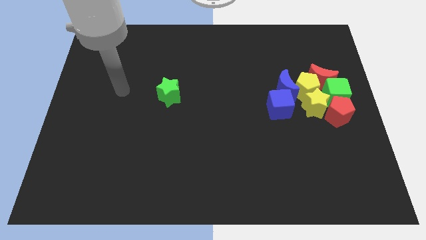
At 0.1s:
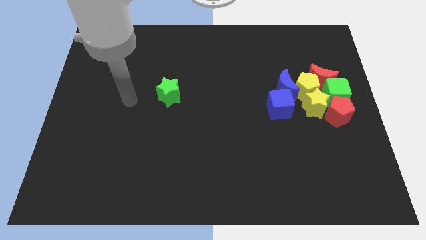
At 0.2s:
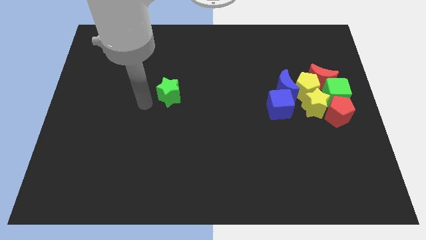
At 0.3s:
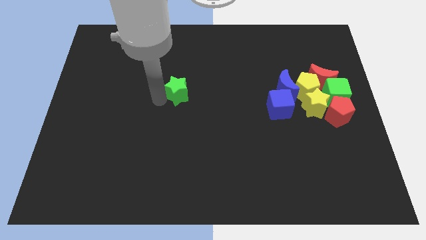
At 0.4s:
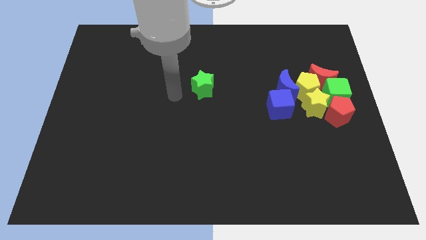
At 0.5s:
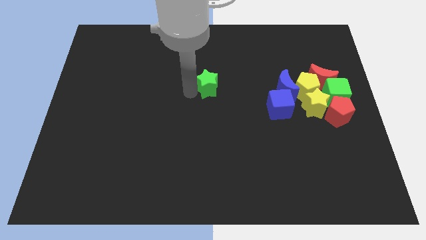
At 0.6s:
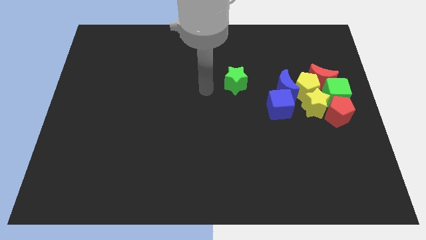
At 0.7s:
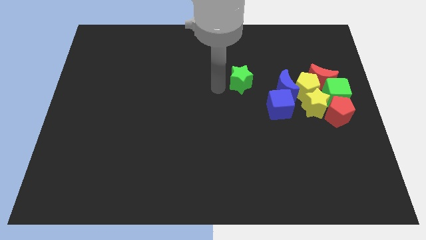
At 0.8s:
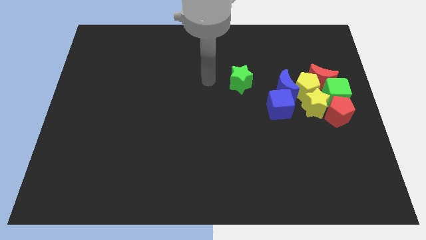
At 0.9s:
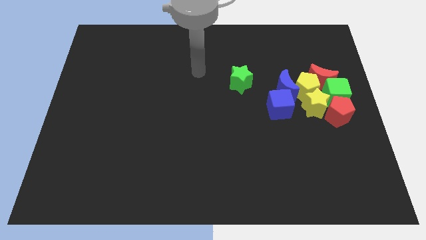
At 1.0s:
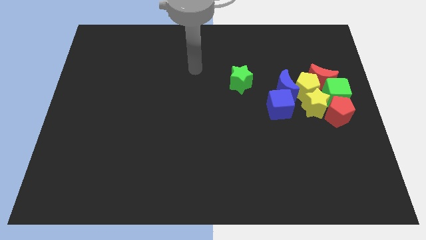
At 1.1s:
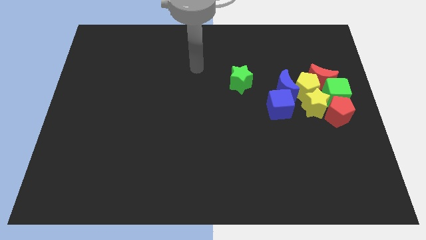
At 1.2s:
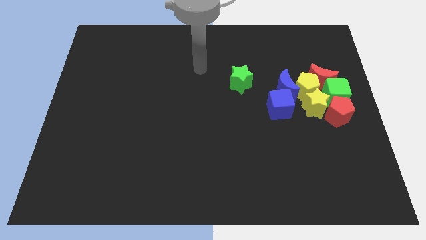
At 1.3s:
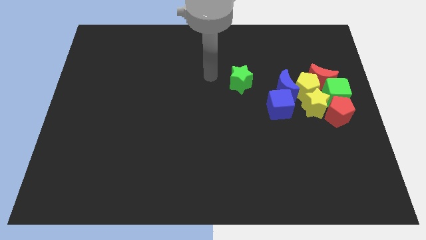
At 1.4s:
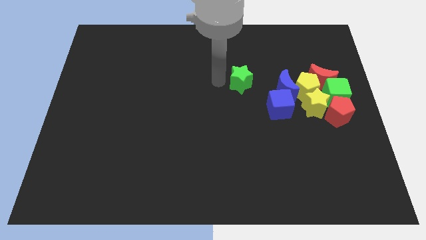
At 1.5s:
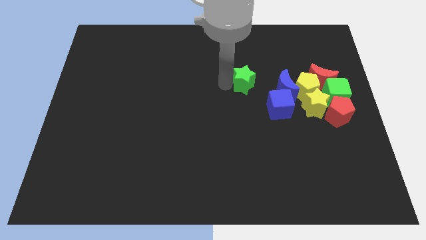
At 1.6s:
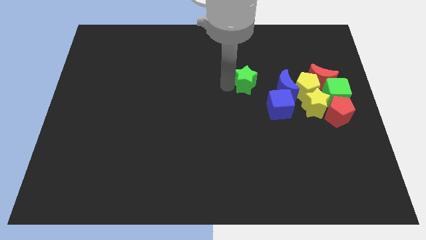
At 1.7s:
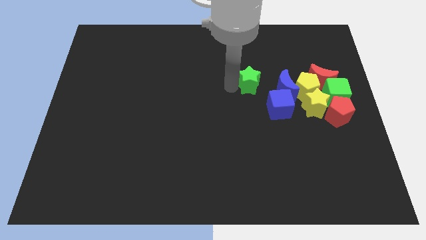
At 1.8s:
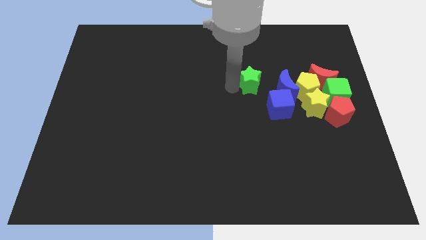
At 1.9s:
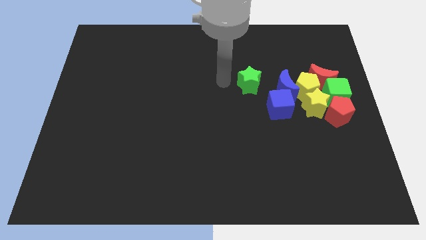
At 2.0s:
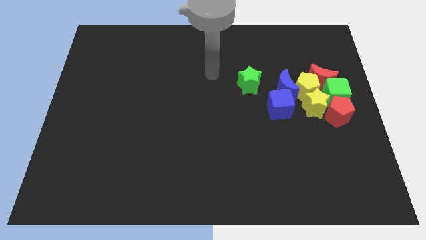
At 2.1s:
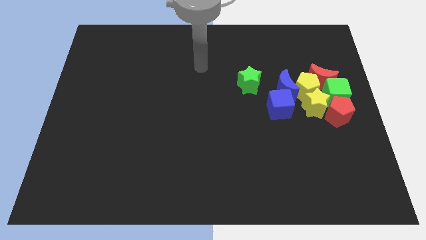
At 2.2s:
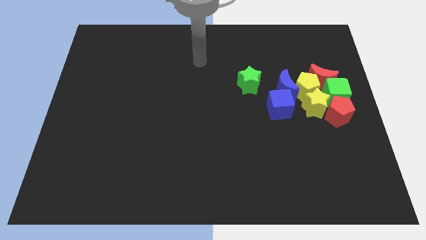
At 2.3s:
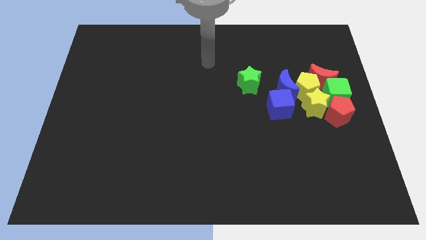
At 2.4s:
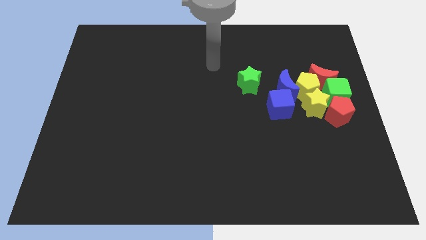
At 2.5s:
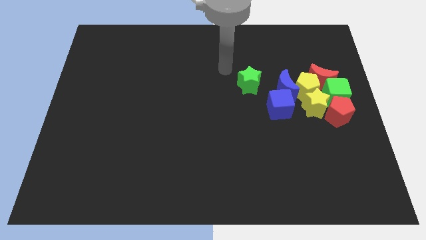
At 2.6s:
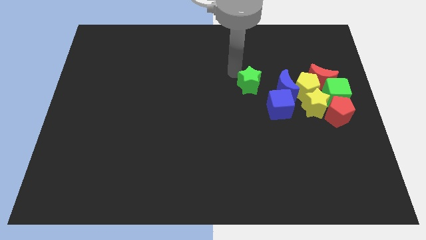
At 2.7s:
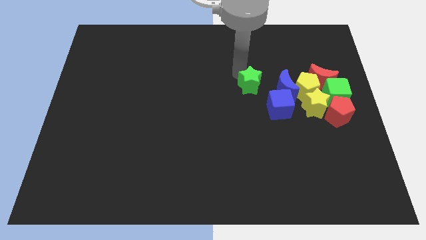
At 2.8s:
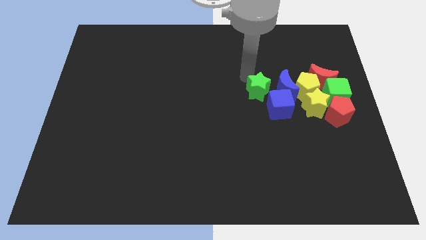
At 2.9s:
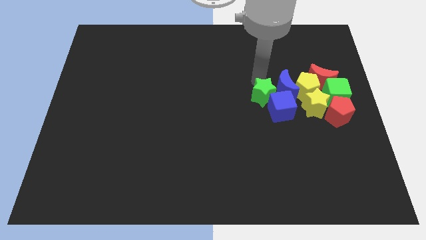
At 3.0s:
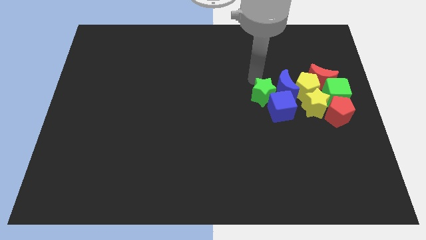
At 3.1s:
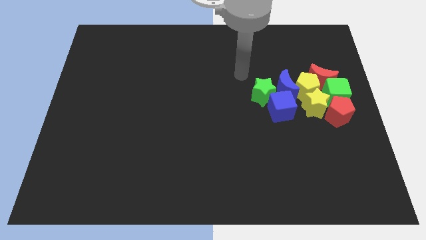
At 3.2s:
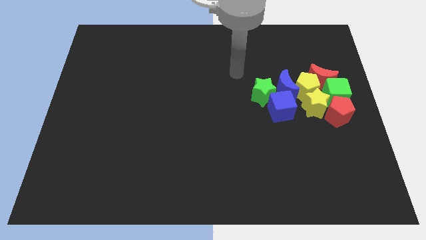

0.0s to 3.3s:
put the green star into blue blocks

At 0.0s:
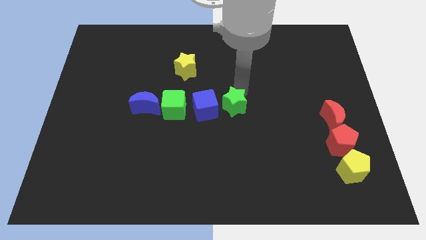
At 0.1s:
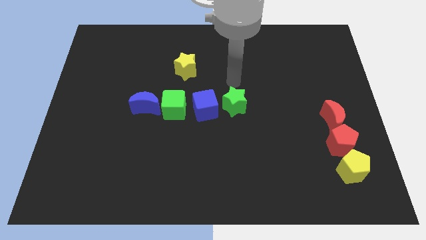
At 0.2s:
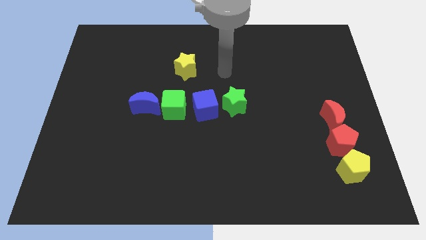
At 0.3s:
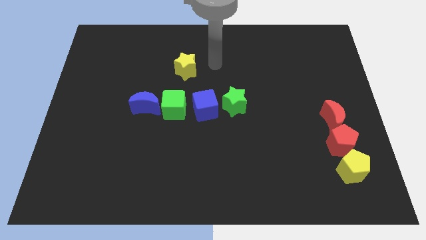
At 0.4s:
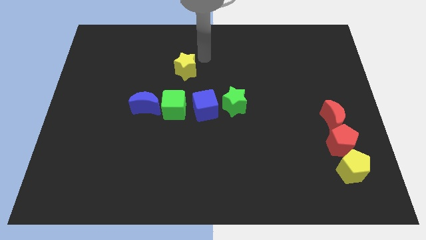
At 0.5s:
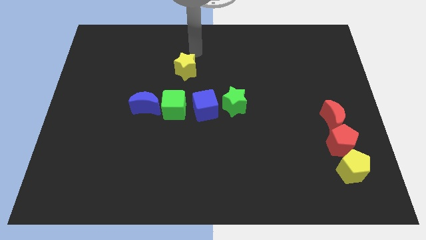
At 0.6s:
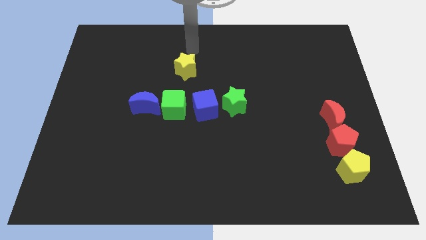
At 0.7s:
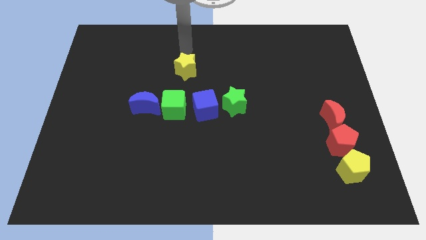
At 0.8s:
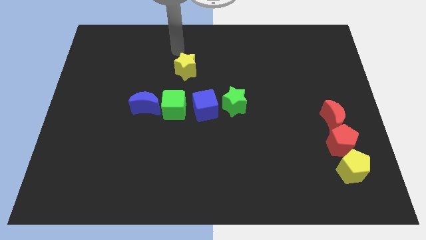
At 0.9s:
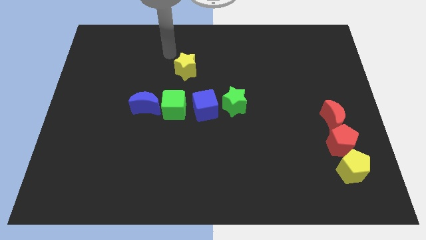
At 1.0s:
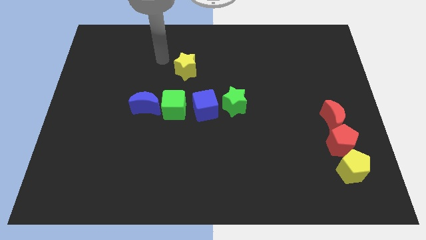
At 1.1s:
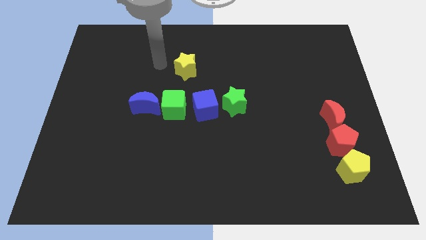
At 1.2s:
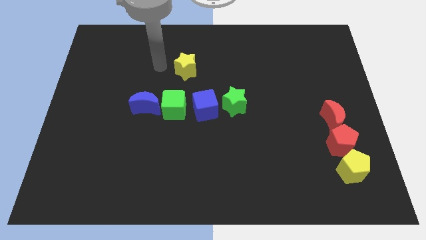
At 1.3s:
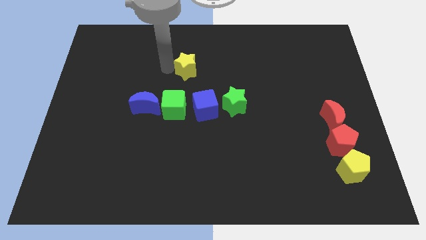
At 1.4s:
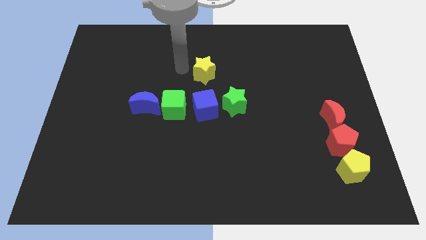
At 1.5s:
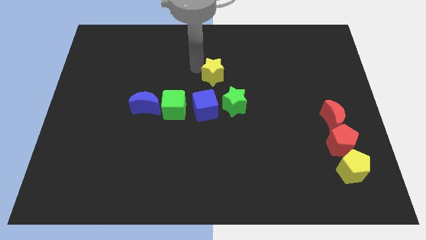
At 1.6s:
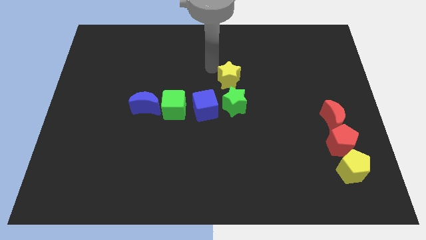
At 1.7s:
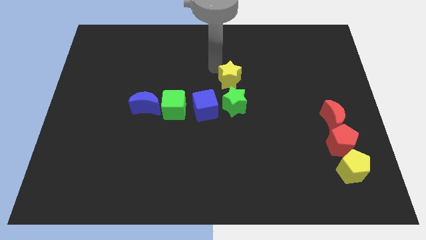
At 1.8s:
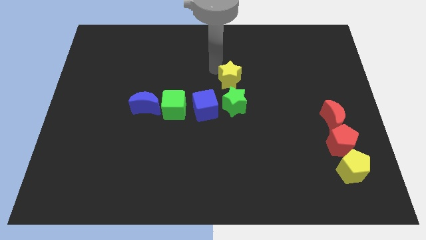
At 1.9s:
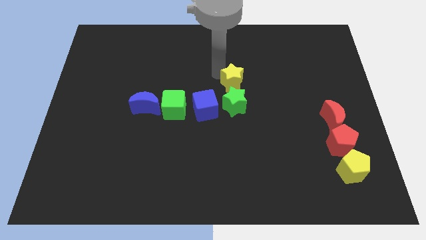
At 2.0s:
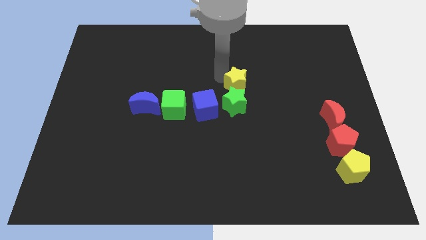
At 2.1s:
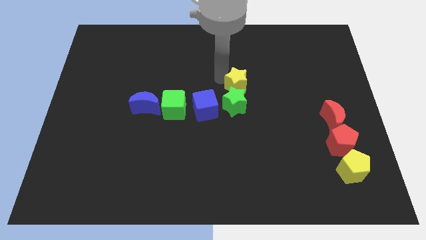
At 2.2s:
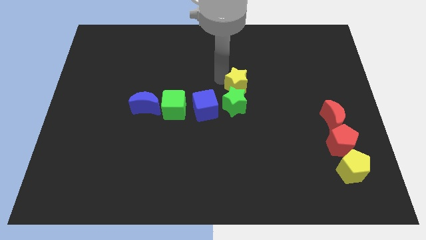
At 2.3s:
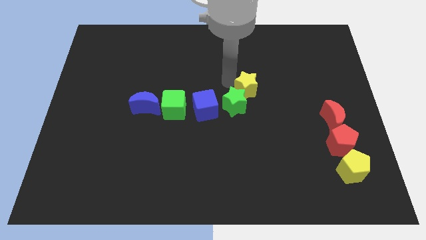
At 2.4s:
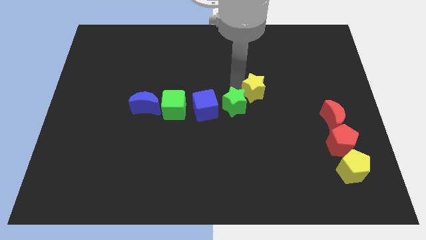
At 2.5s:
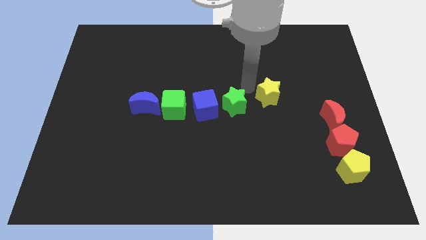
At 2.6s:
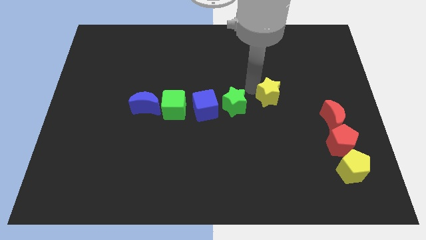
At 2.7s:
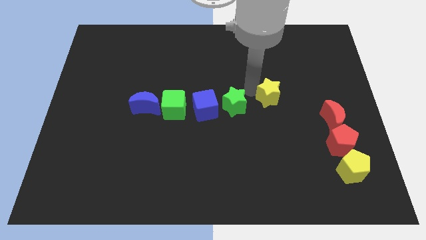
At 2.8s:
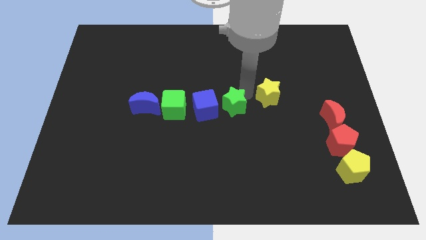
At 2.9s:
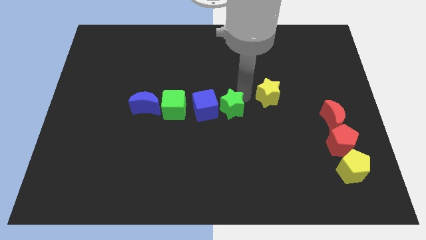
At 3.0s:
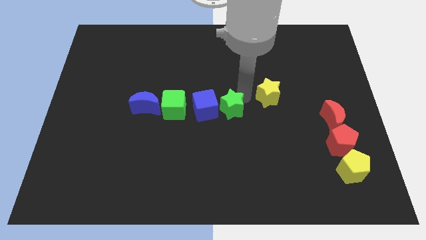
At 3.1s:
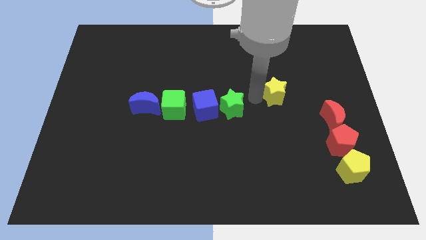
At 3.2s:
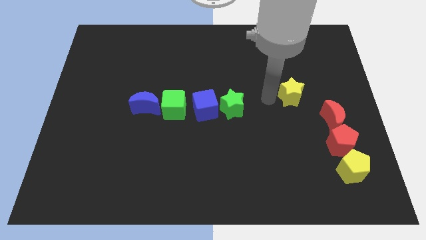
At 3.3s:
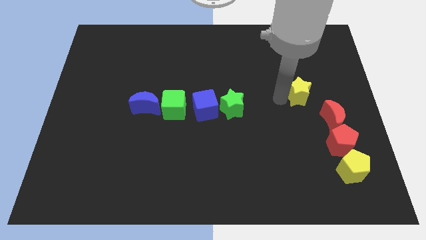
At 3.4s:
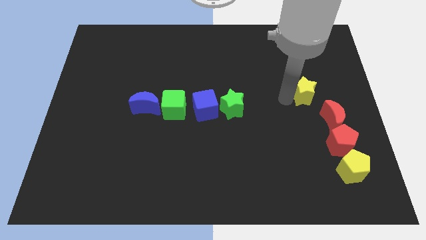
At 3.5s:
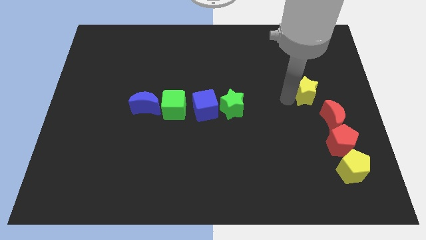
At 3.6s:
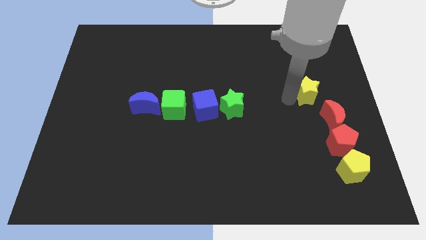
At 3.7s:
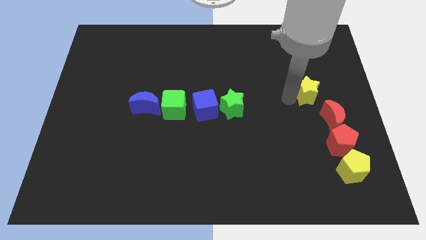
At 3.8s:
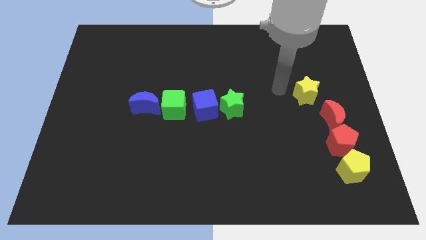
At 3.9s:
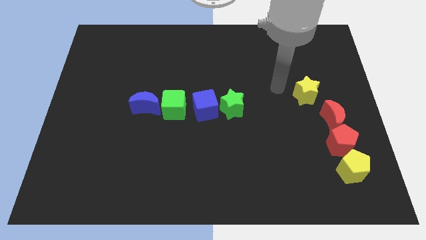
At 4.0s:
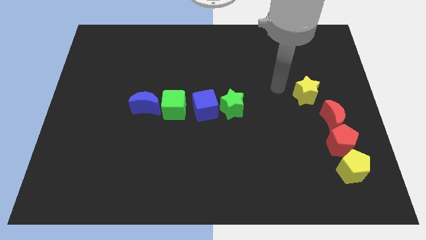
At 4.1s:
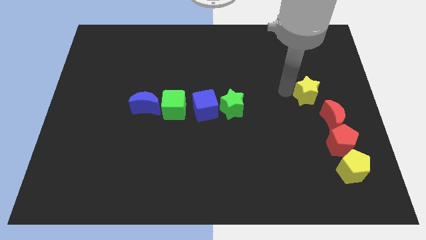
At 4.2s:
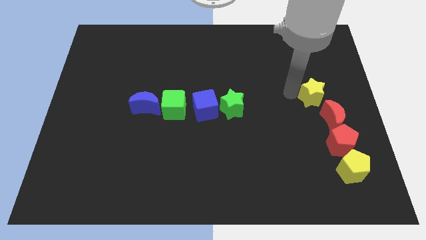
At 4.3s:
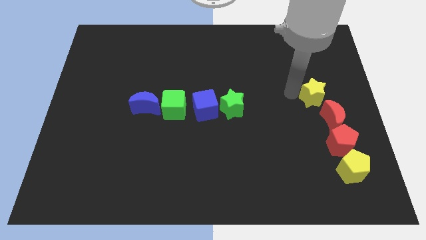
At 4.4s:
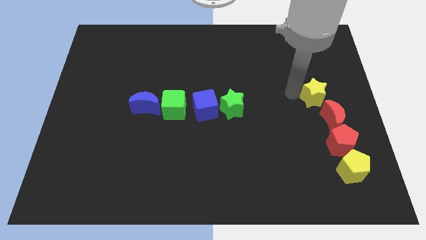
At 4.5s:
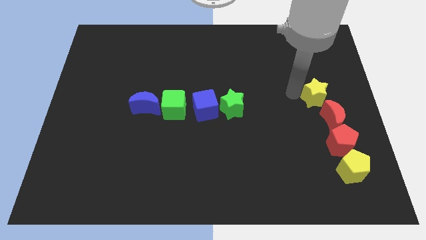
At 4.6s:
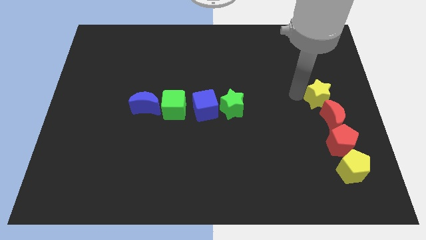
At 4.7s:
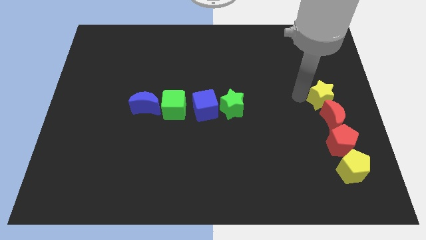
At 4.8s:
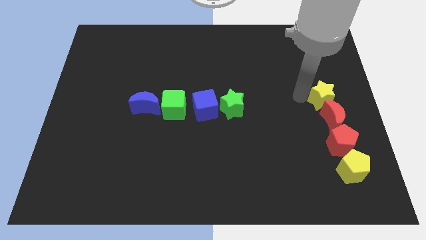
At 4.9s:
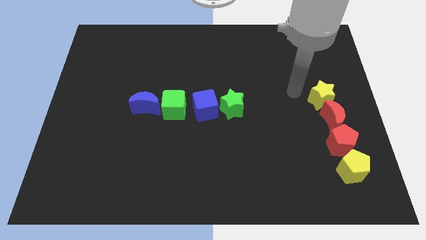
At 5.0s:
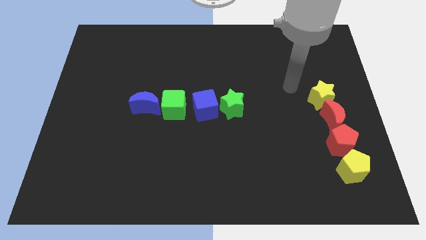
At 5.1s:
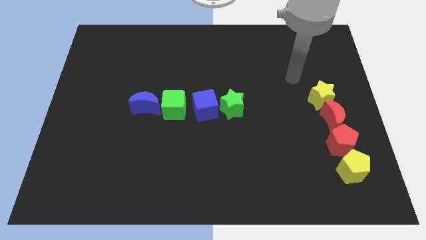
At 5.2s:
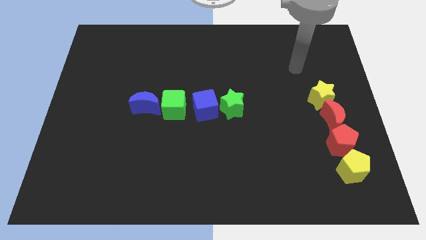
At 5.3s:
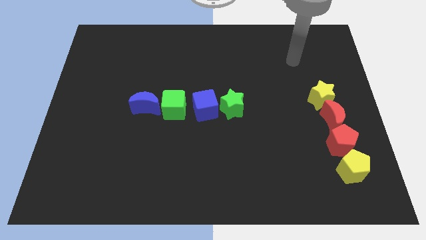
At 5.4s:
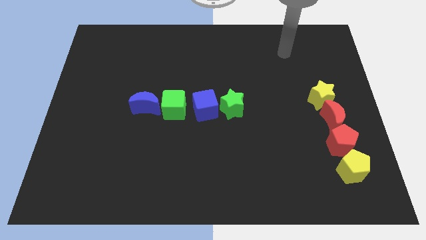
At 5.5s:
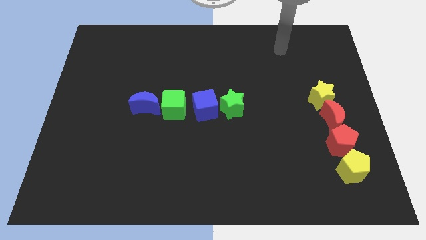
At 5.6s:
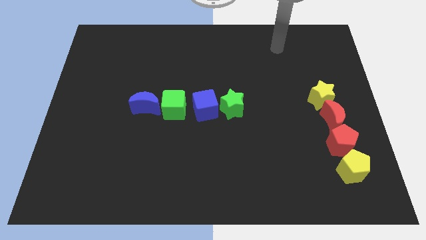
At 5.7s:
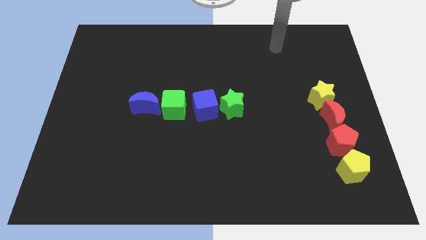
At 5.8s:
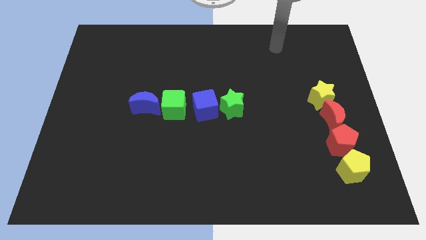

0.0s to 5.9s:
place the yellow star close to the red crescent
